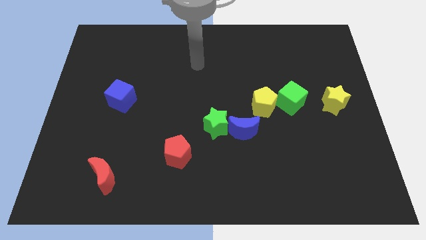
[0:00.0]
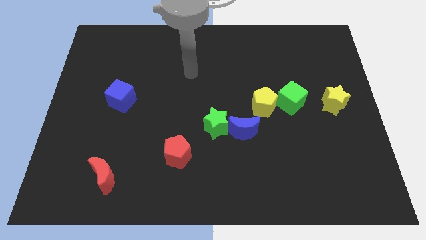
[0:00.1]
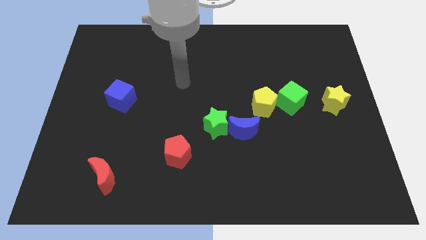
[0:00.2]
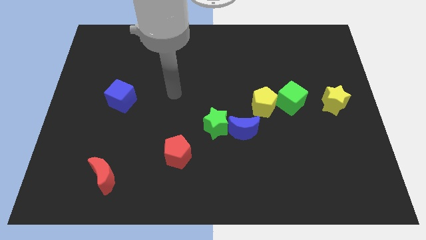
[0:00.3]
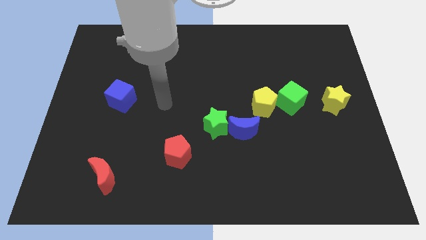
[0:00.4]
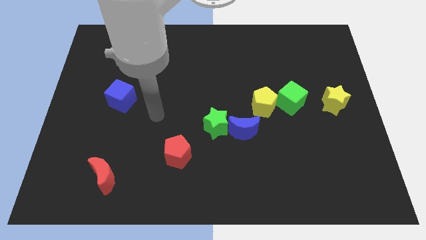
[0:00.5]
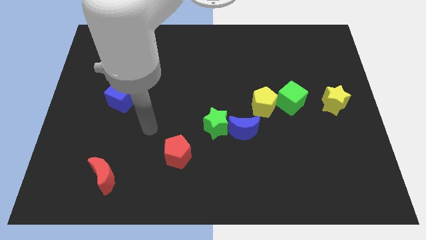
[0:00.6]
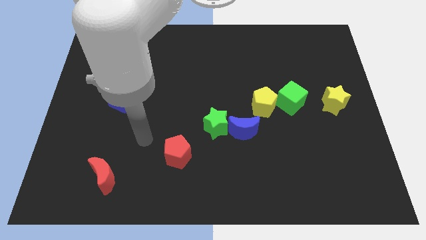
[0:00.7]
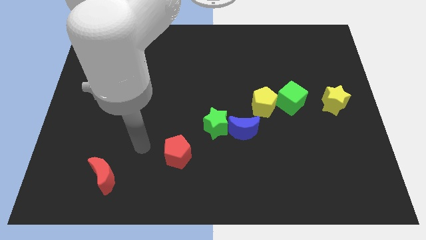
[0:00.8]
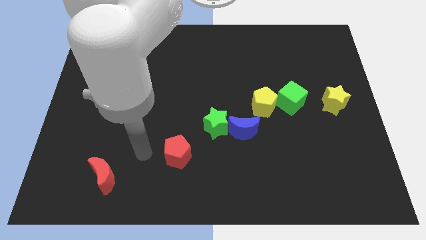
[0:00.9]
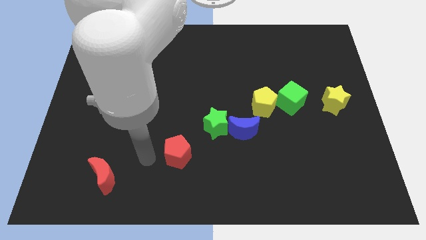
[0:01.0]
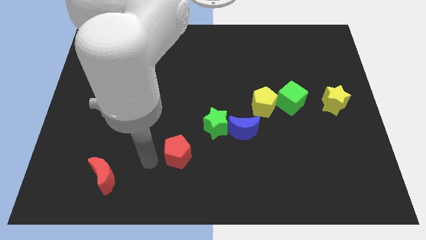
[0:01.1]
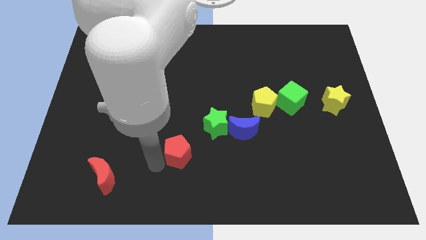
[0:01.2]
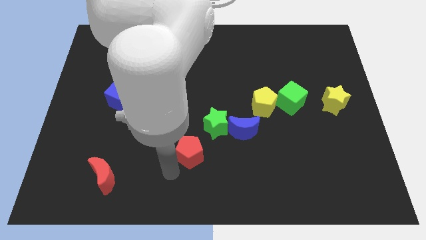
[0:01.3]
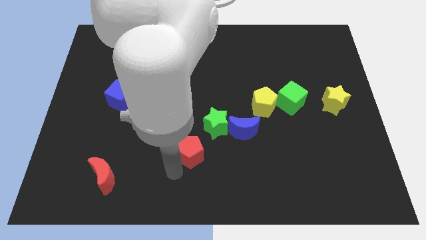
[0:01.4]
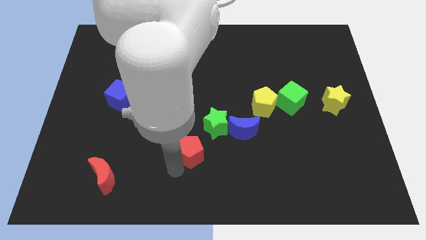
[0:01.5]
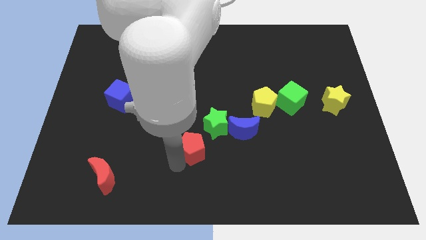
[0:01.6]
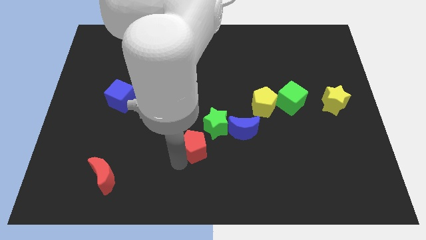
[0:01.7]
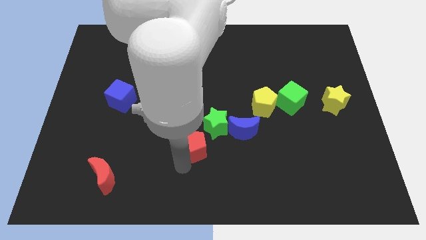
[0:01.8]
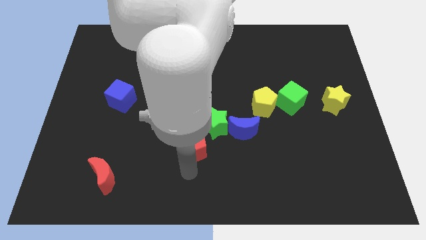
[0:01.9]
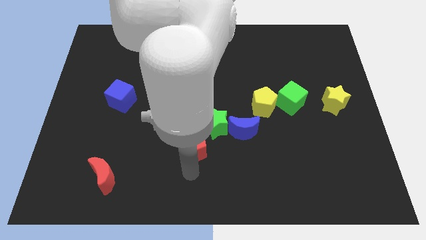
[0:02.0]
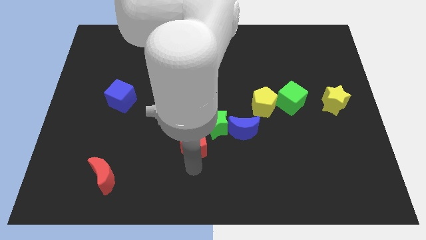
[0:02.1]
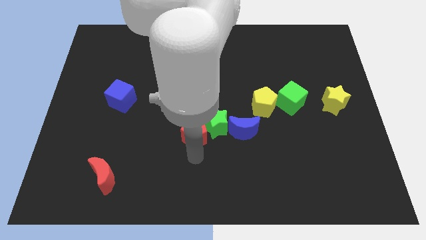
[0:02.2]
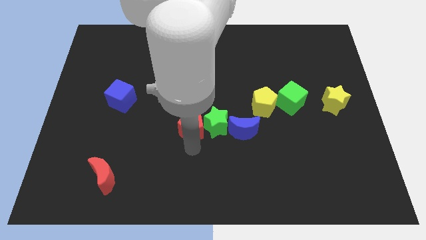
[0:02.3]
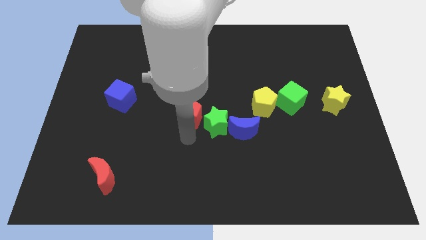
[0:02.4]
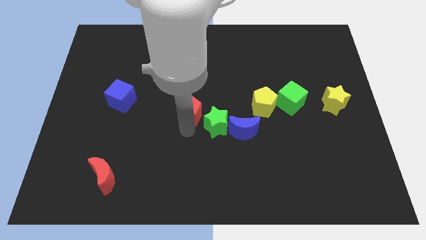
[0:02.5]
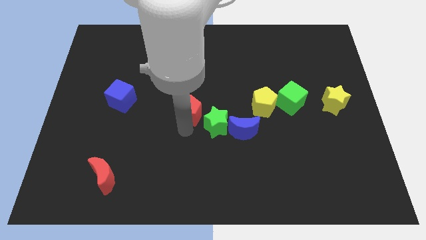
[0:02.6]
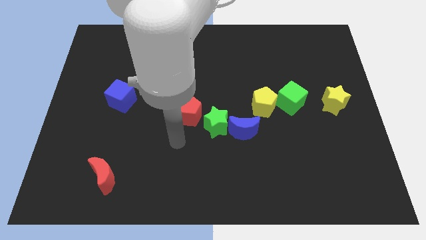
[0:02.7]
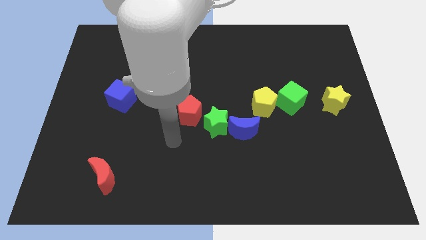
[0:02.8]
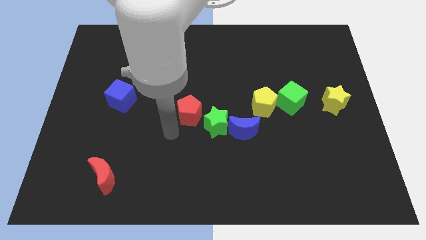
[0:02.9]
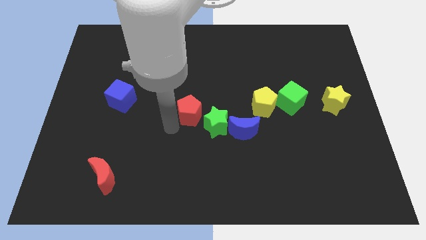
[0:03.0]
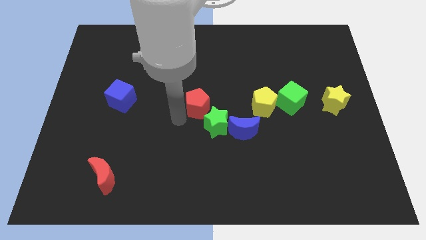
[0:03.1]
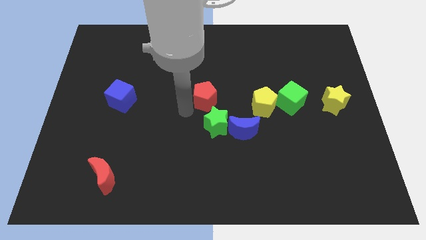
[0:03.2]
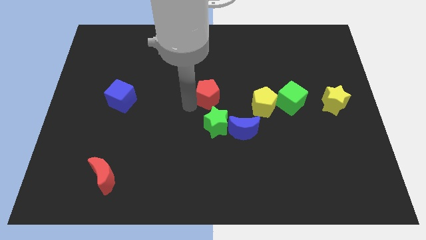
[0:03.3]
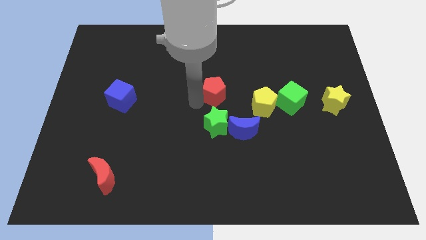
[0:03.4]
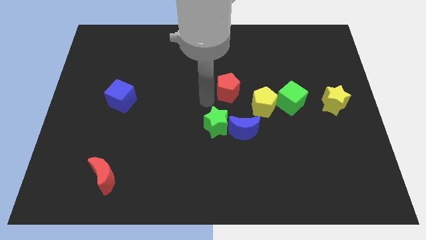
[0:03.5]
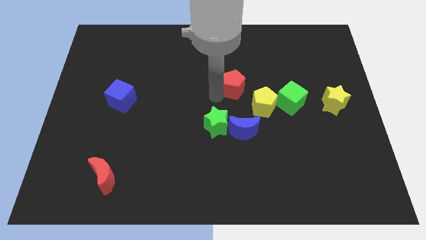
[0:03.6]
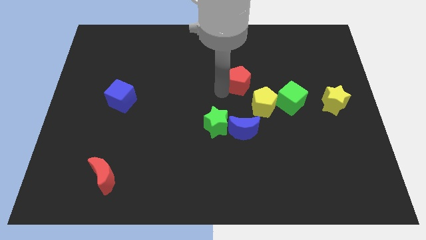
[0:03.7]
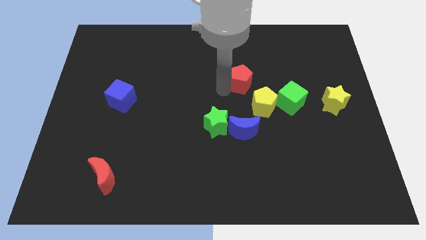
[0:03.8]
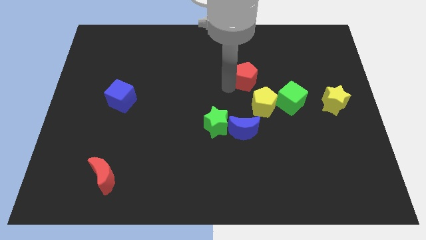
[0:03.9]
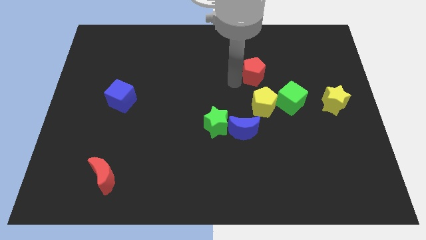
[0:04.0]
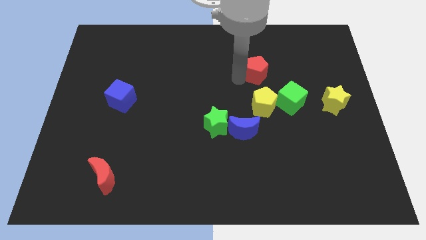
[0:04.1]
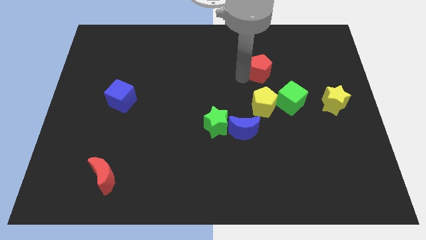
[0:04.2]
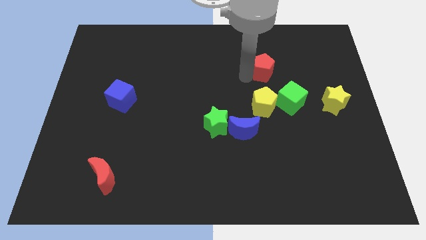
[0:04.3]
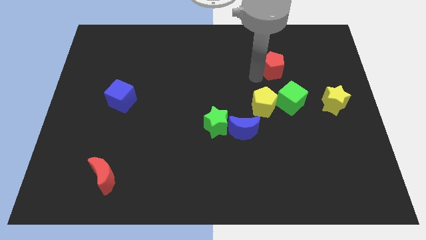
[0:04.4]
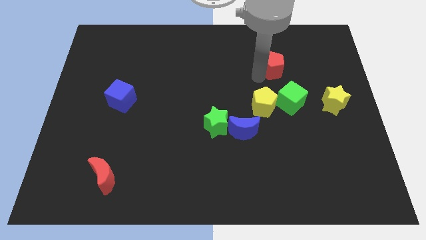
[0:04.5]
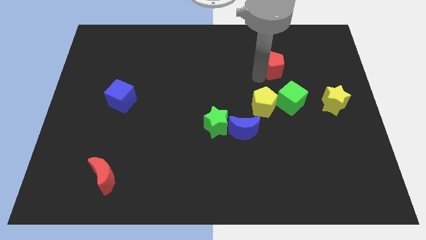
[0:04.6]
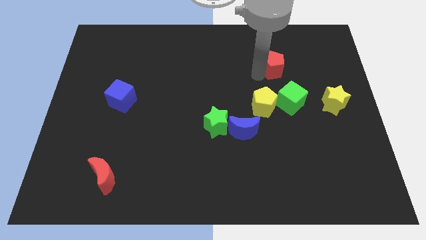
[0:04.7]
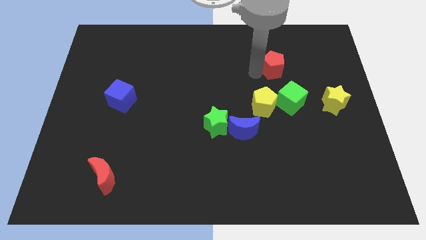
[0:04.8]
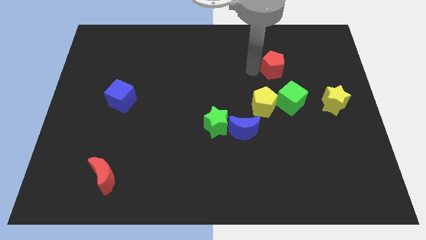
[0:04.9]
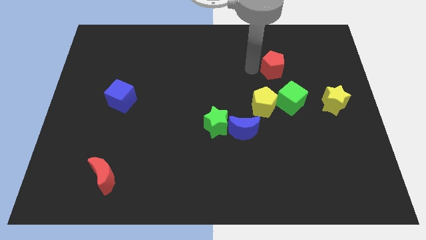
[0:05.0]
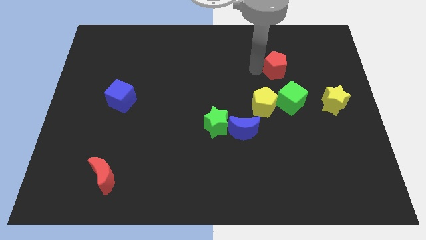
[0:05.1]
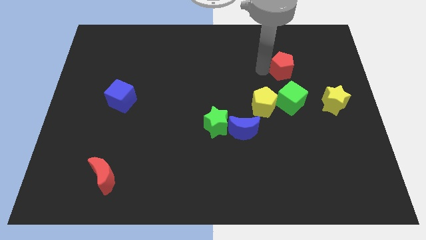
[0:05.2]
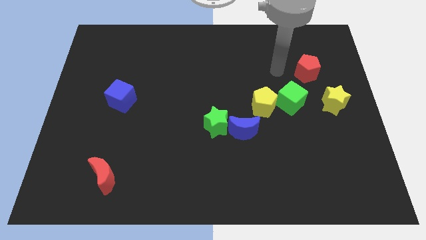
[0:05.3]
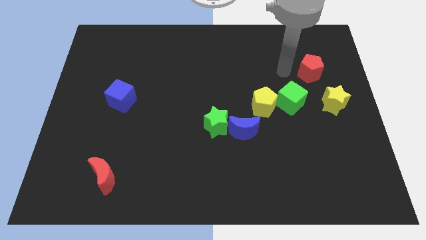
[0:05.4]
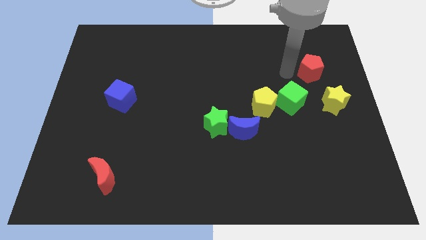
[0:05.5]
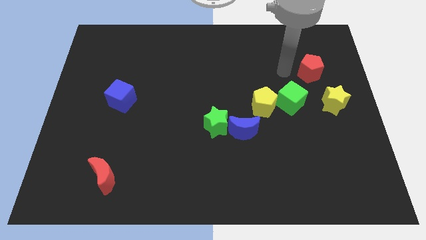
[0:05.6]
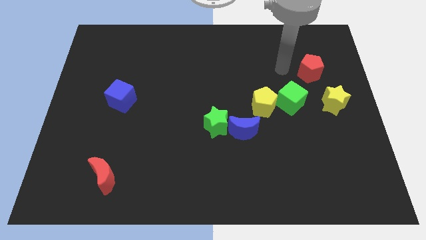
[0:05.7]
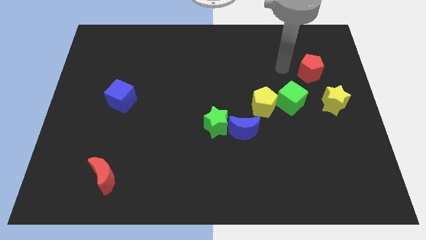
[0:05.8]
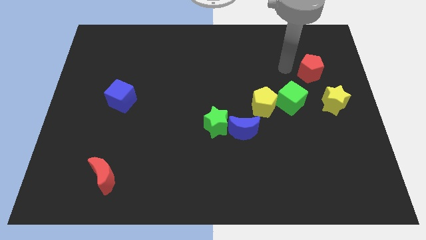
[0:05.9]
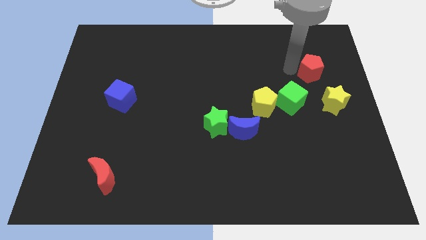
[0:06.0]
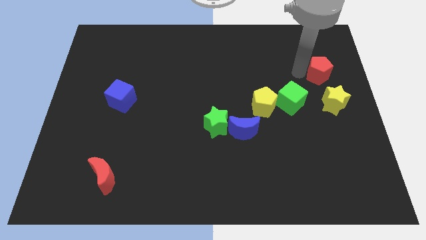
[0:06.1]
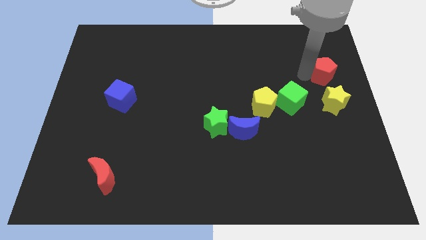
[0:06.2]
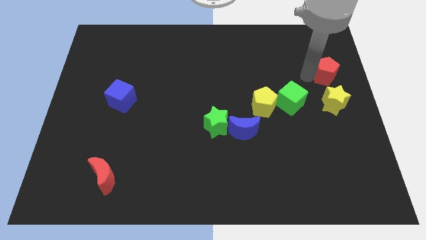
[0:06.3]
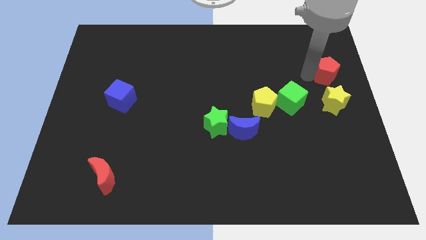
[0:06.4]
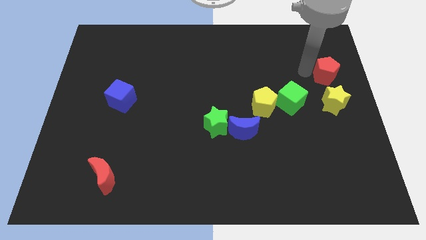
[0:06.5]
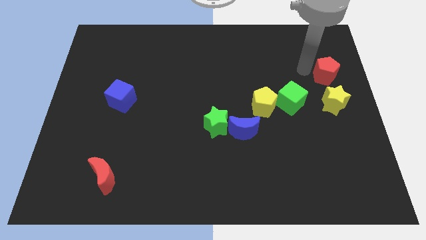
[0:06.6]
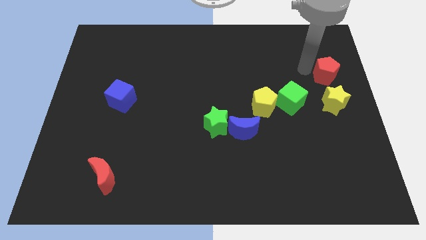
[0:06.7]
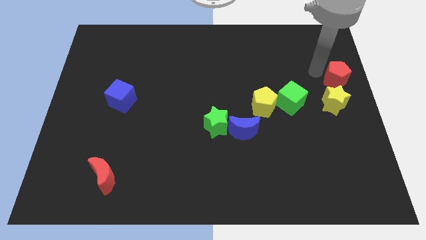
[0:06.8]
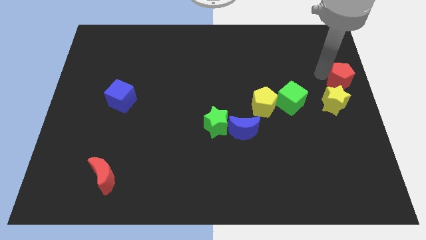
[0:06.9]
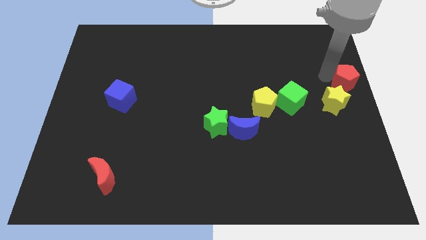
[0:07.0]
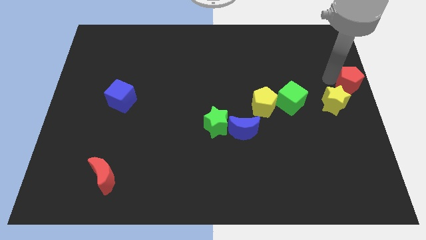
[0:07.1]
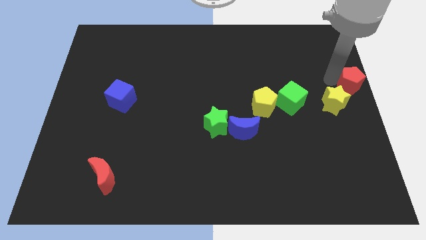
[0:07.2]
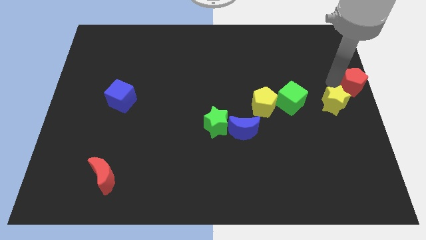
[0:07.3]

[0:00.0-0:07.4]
put the red pentagon at the top right side of the yellow star

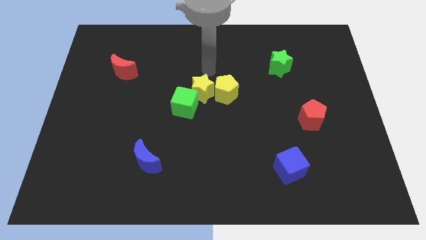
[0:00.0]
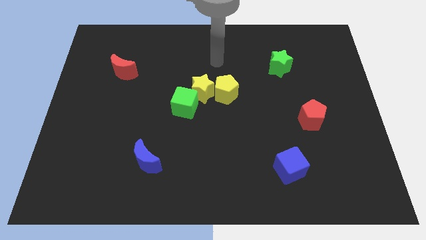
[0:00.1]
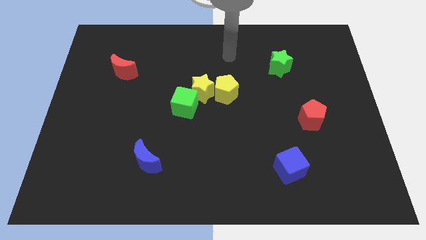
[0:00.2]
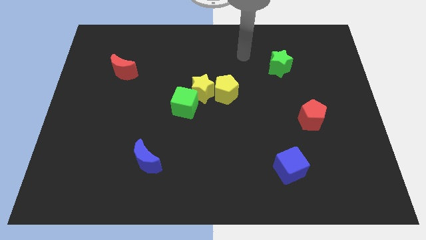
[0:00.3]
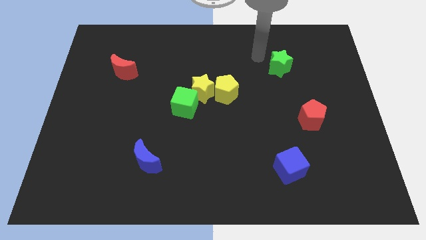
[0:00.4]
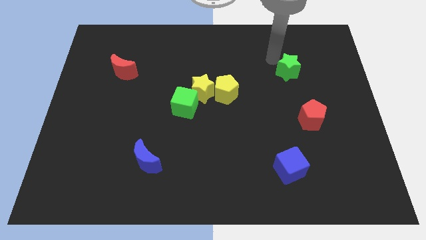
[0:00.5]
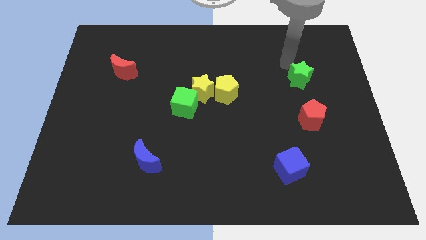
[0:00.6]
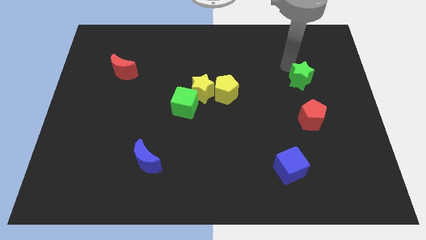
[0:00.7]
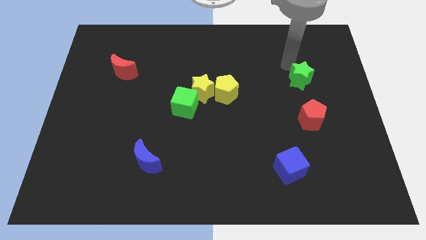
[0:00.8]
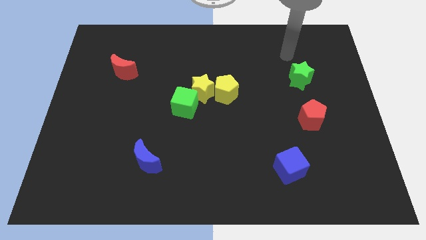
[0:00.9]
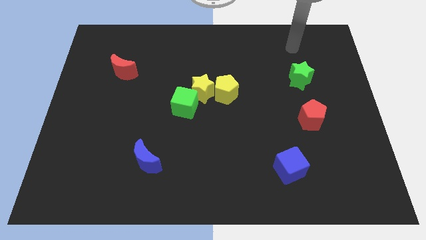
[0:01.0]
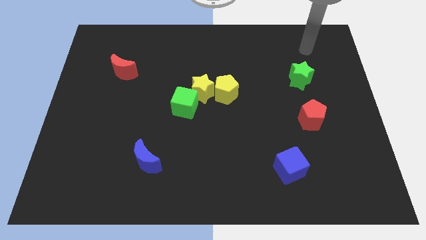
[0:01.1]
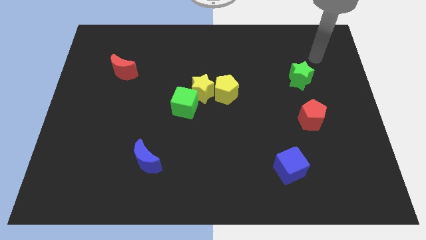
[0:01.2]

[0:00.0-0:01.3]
place the green star above the red pentagon

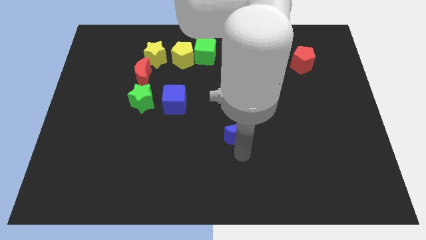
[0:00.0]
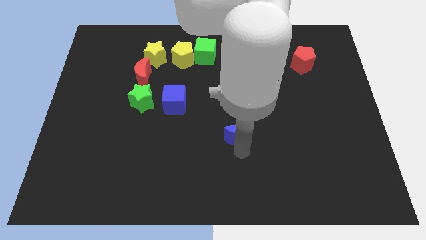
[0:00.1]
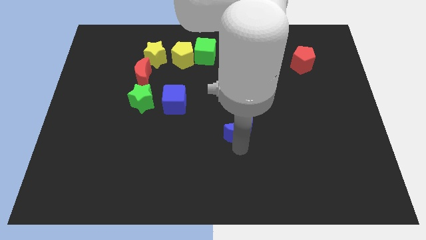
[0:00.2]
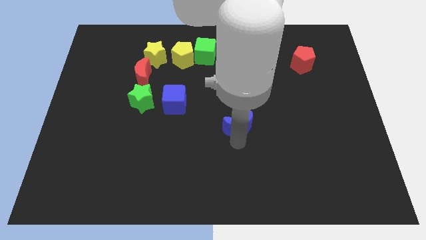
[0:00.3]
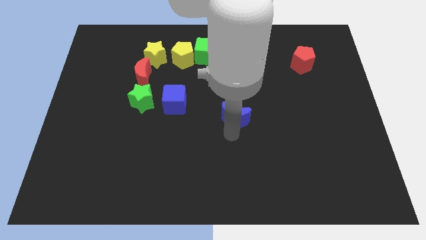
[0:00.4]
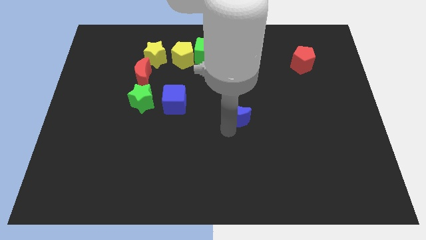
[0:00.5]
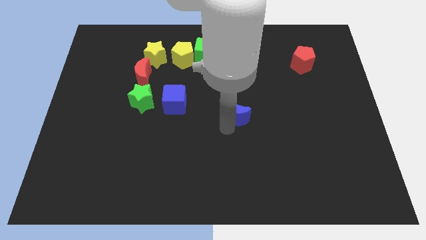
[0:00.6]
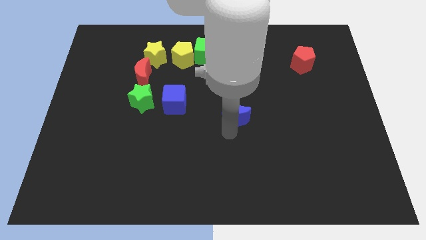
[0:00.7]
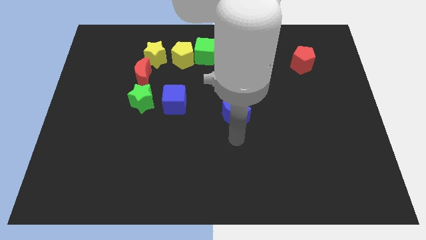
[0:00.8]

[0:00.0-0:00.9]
move the blue moon right to the blue cube
